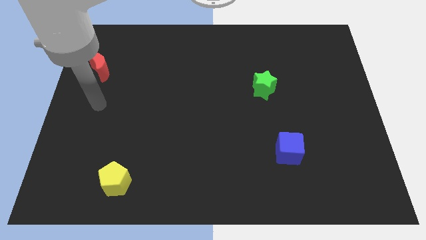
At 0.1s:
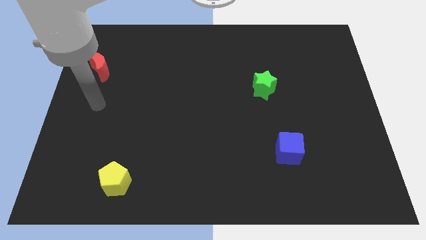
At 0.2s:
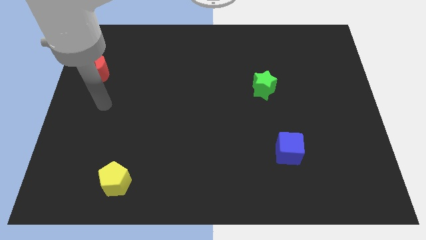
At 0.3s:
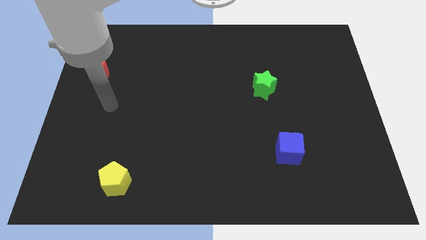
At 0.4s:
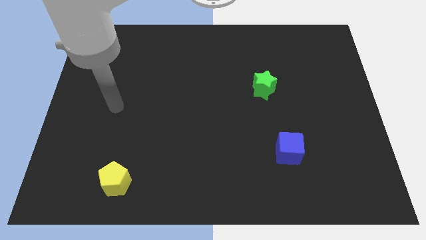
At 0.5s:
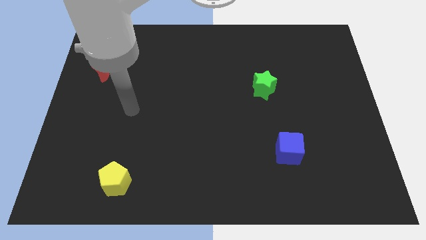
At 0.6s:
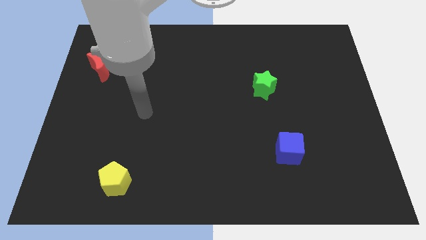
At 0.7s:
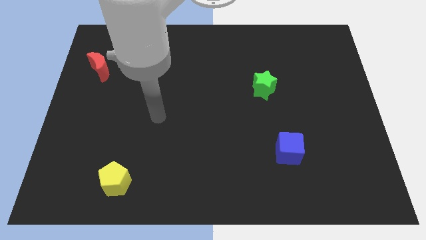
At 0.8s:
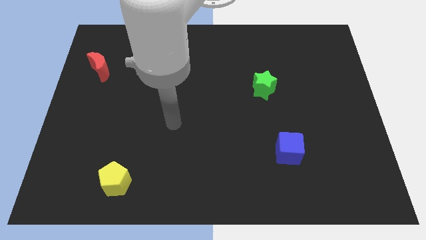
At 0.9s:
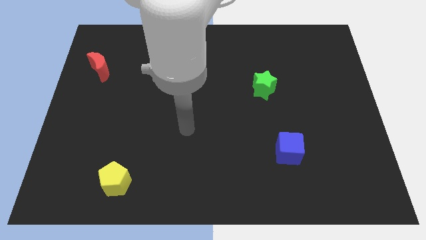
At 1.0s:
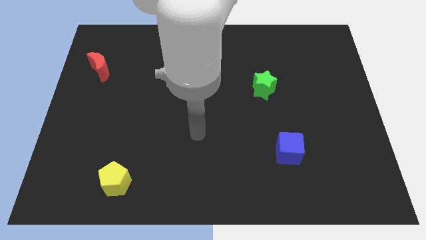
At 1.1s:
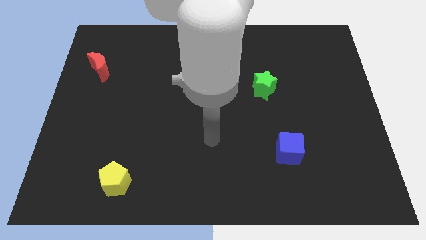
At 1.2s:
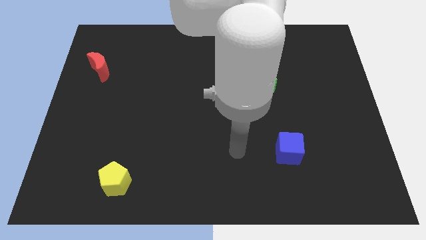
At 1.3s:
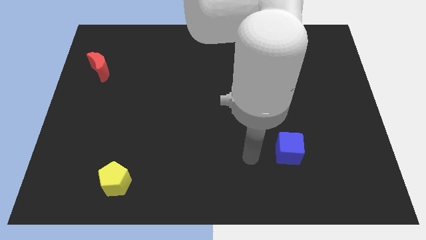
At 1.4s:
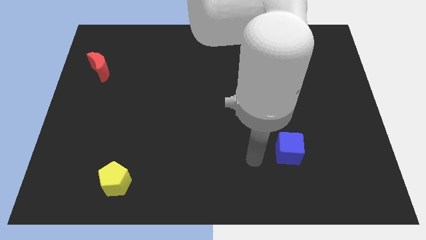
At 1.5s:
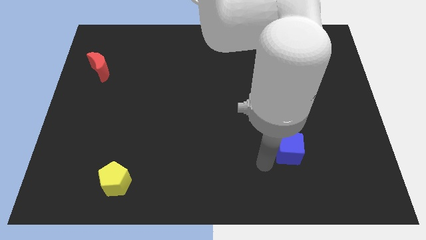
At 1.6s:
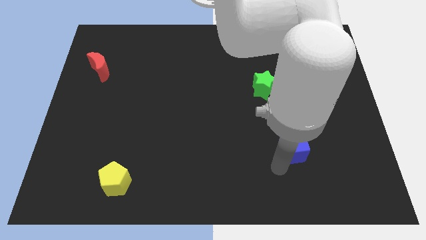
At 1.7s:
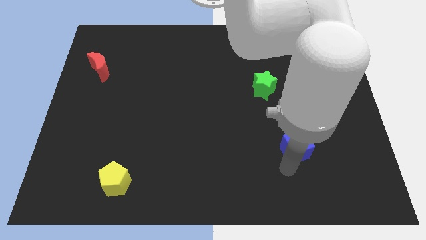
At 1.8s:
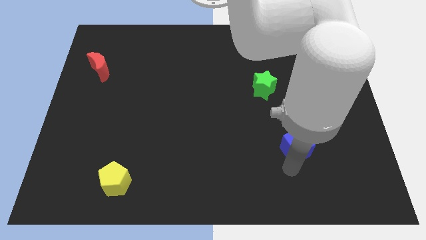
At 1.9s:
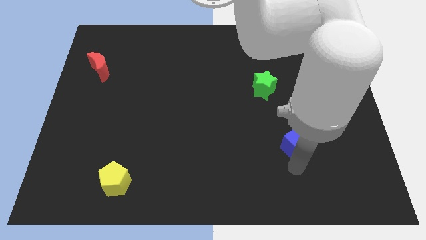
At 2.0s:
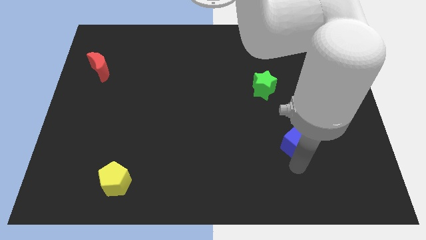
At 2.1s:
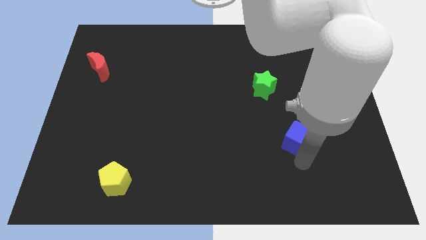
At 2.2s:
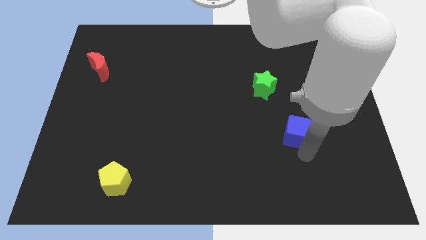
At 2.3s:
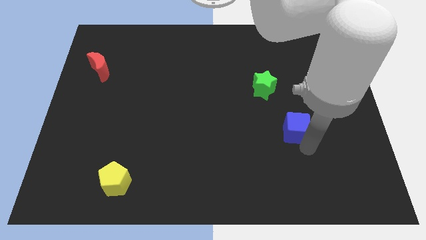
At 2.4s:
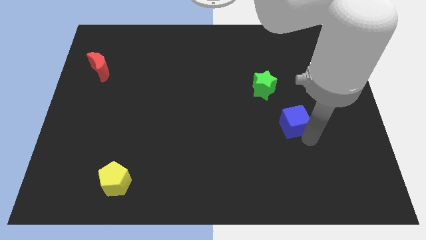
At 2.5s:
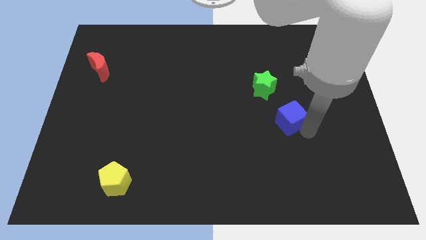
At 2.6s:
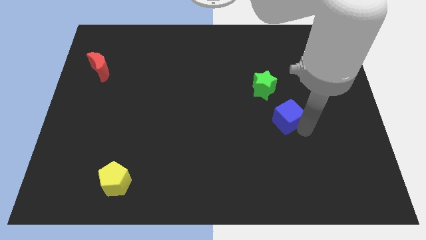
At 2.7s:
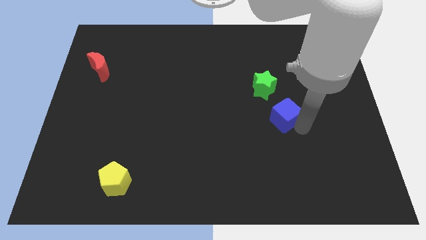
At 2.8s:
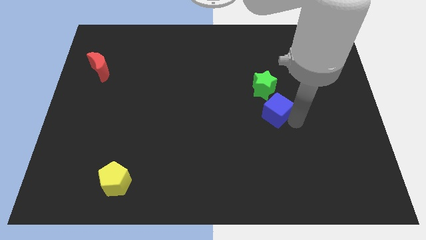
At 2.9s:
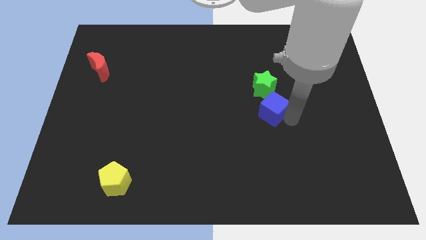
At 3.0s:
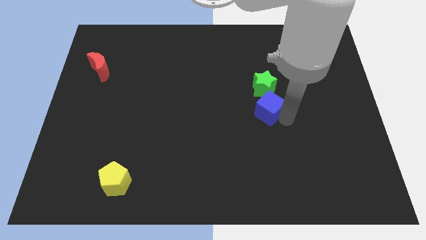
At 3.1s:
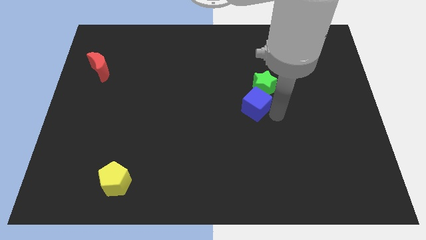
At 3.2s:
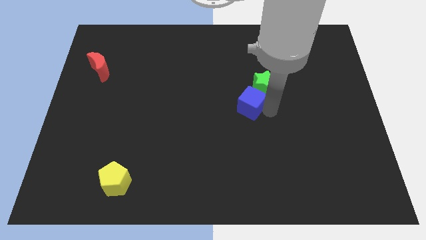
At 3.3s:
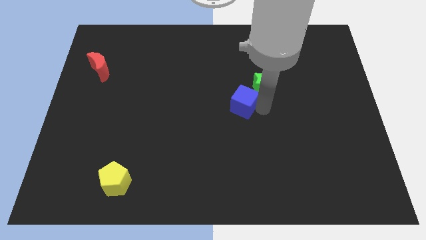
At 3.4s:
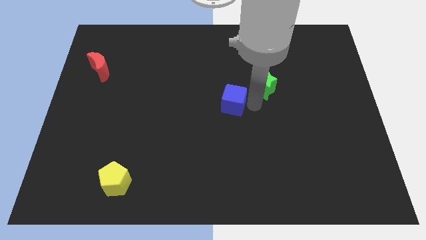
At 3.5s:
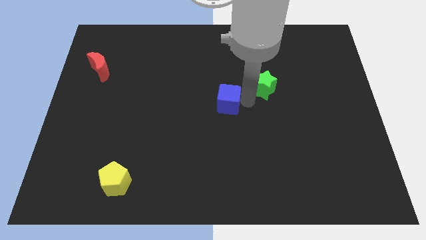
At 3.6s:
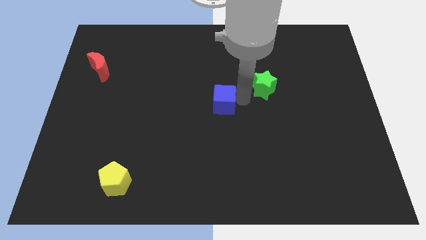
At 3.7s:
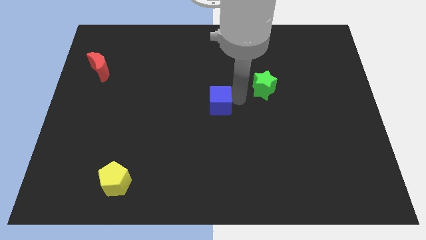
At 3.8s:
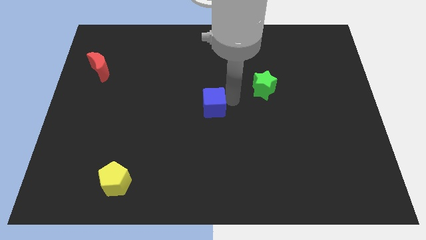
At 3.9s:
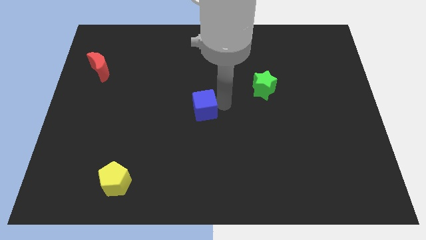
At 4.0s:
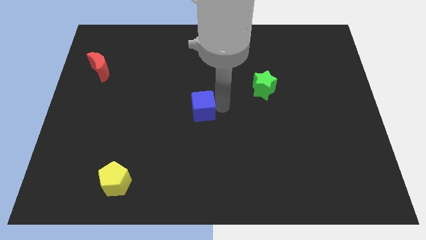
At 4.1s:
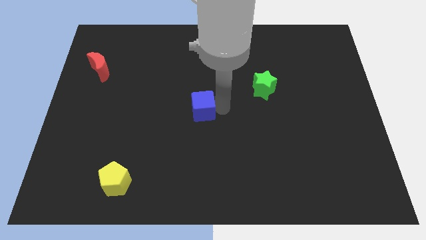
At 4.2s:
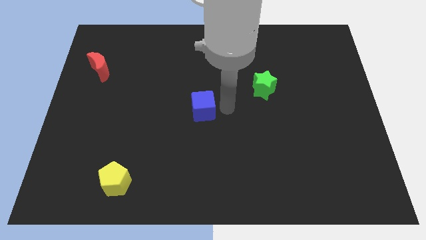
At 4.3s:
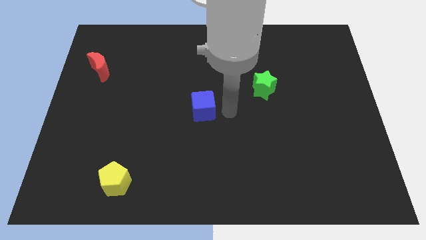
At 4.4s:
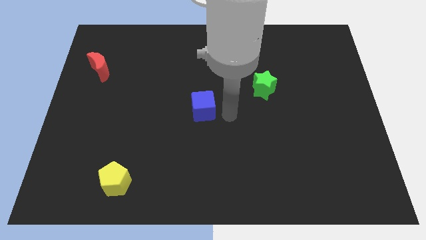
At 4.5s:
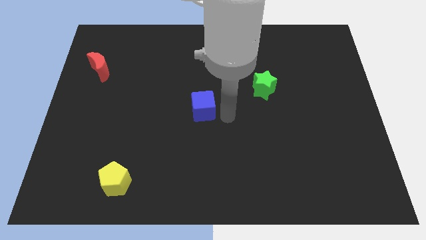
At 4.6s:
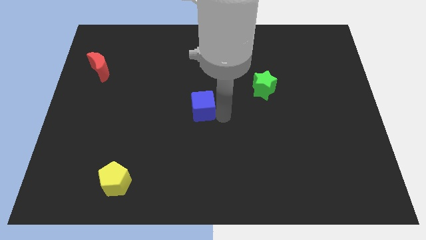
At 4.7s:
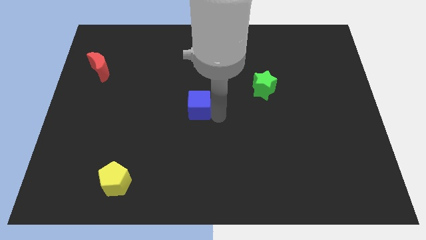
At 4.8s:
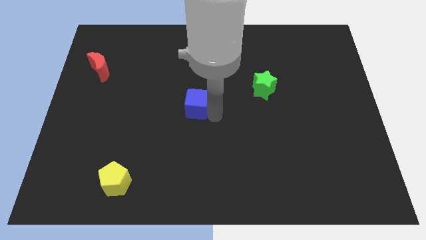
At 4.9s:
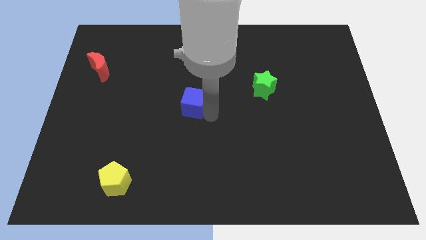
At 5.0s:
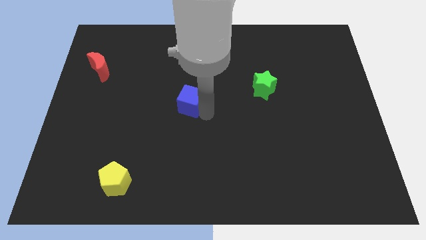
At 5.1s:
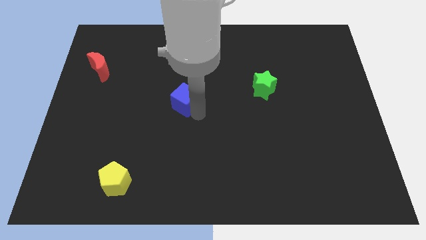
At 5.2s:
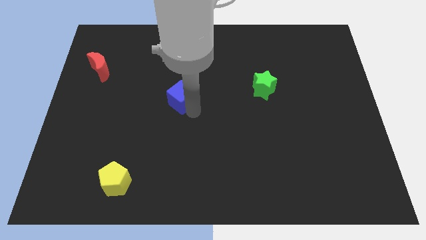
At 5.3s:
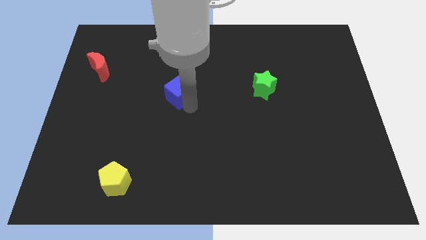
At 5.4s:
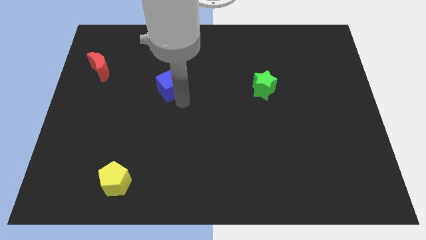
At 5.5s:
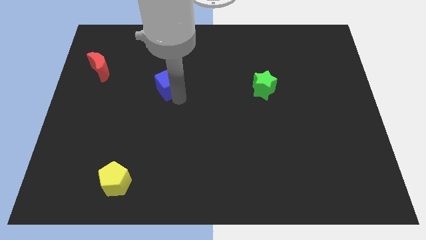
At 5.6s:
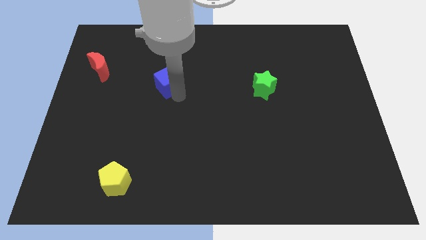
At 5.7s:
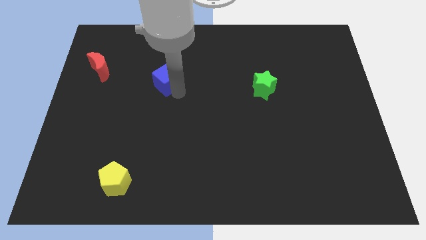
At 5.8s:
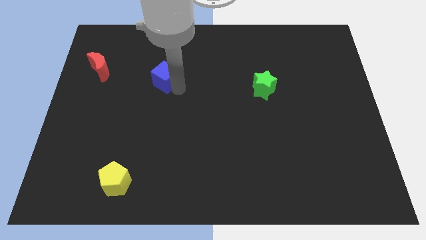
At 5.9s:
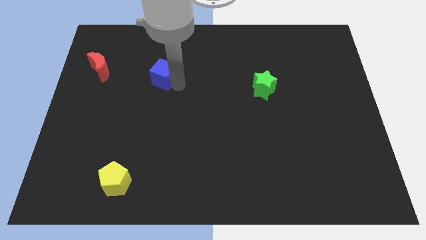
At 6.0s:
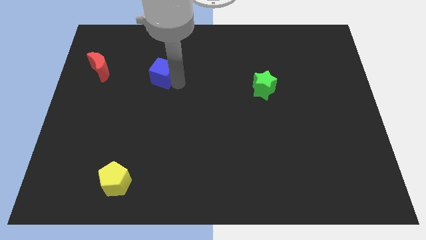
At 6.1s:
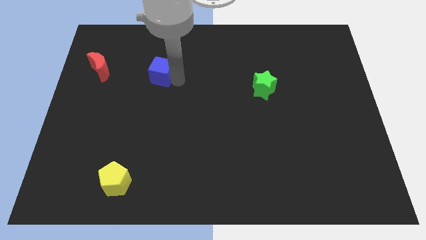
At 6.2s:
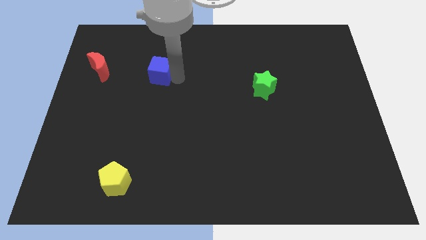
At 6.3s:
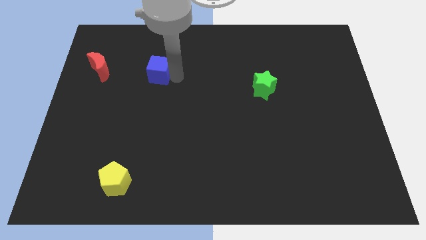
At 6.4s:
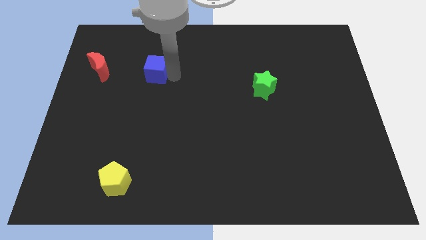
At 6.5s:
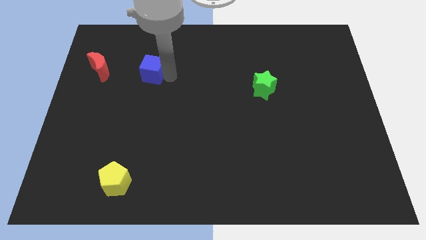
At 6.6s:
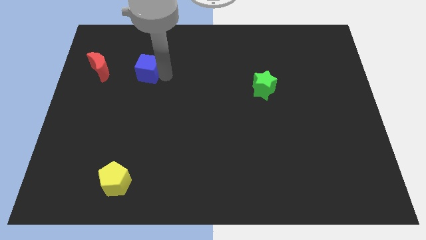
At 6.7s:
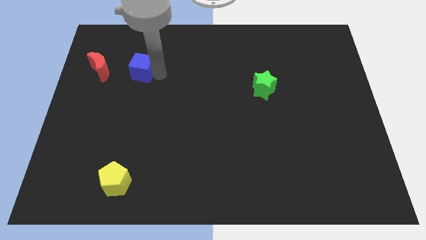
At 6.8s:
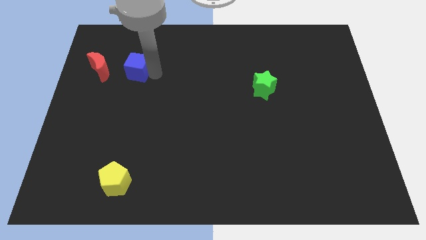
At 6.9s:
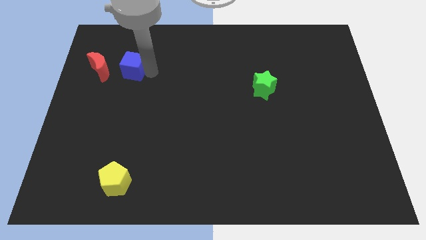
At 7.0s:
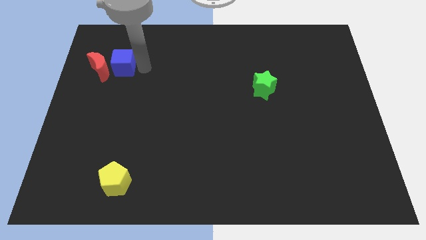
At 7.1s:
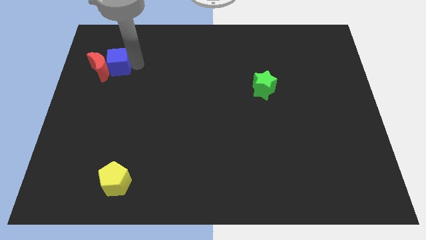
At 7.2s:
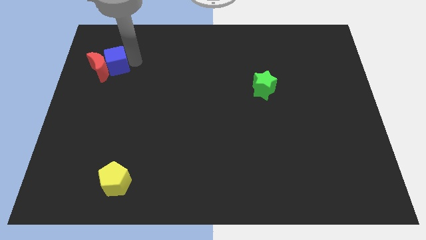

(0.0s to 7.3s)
move the cube towards the moon

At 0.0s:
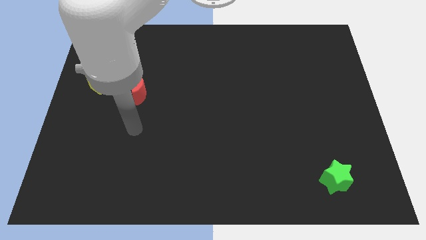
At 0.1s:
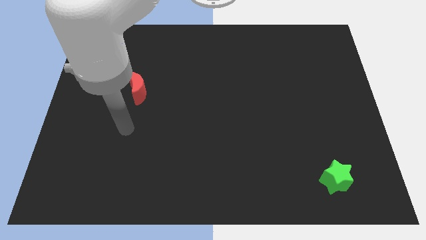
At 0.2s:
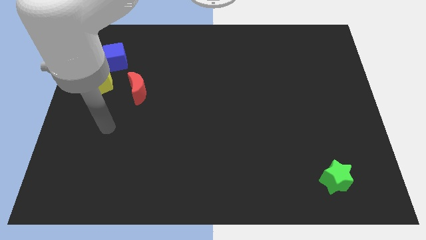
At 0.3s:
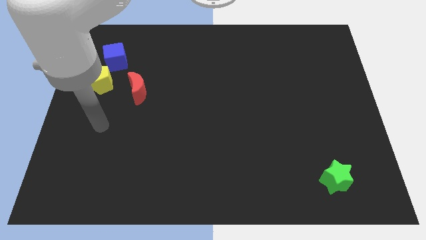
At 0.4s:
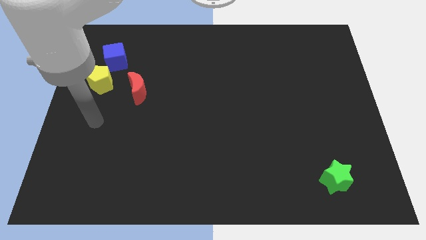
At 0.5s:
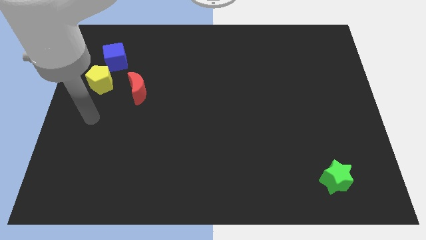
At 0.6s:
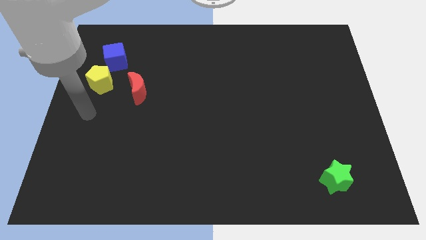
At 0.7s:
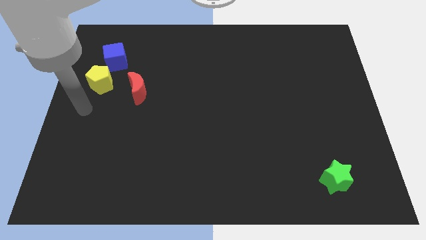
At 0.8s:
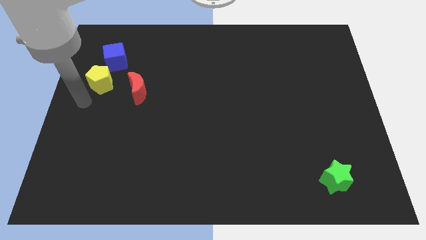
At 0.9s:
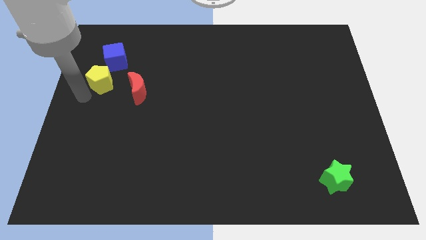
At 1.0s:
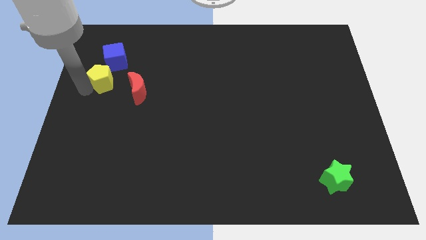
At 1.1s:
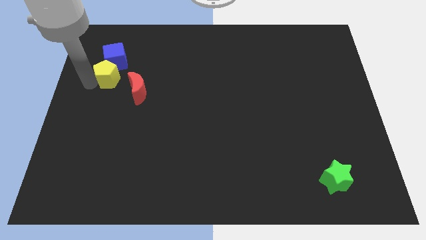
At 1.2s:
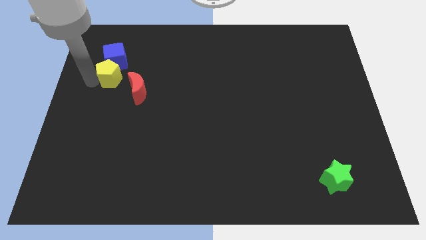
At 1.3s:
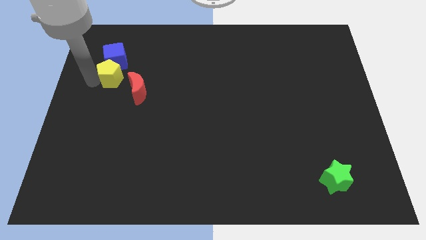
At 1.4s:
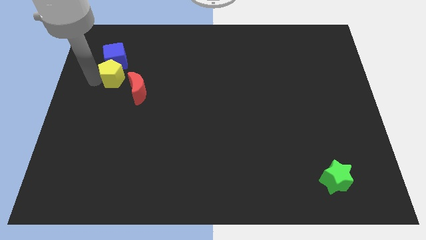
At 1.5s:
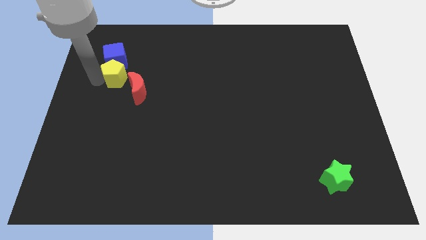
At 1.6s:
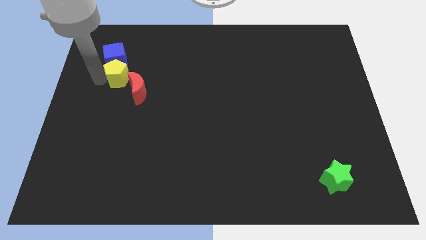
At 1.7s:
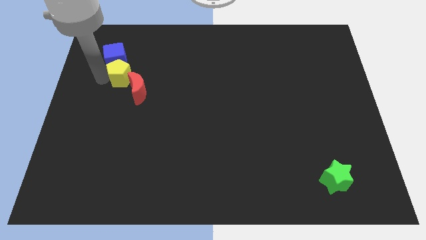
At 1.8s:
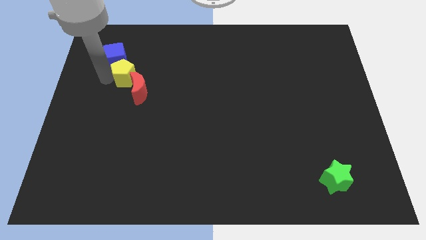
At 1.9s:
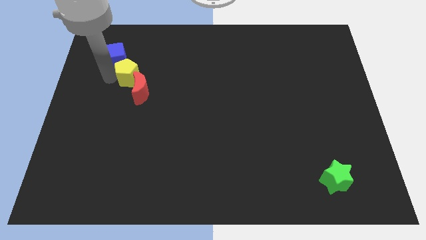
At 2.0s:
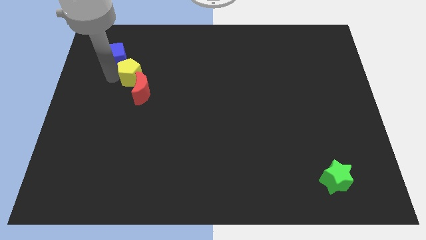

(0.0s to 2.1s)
move the yellow pentagon towards the red moon
